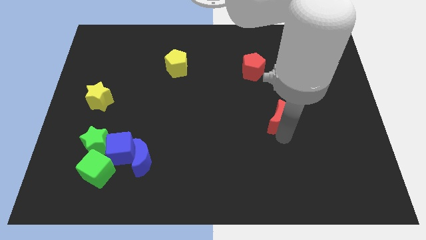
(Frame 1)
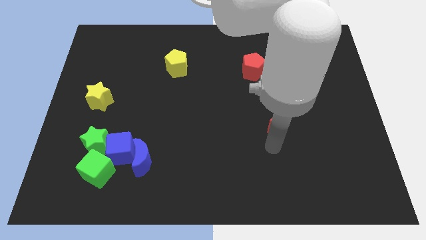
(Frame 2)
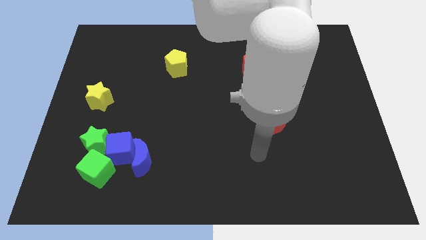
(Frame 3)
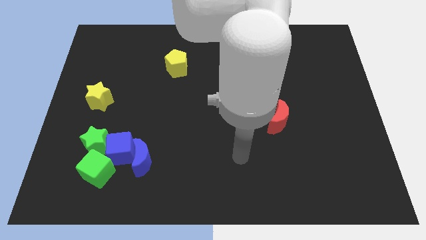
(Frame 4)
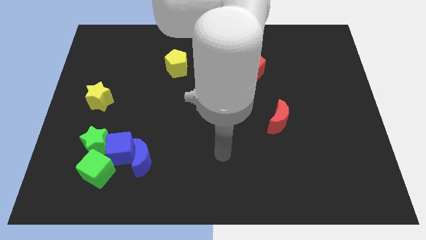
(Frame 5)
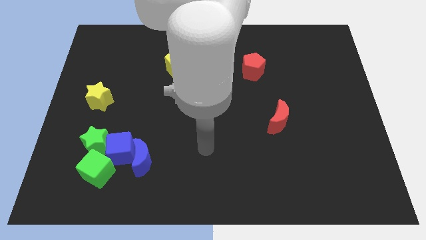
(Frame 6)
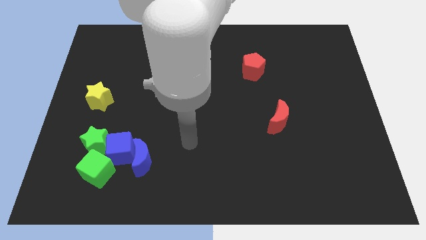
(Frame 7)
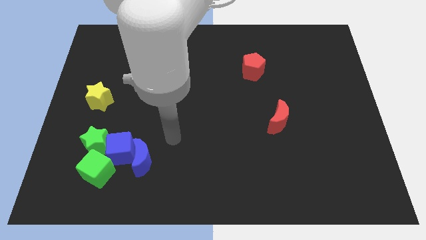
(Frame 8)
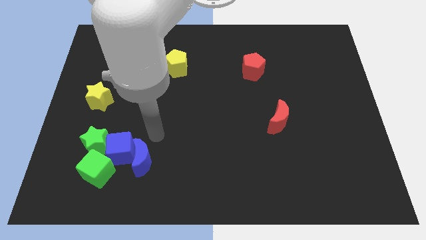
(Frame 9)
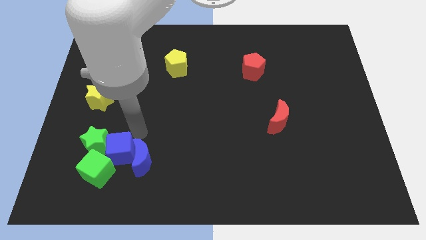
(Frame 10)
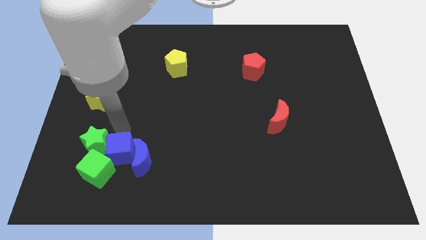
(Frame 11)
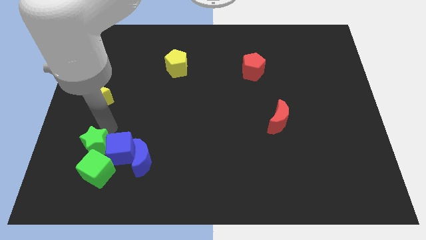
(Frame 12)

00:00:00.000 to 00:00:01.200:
move your arm towards the top of the blue cube

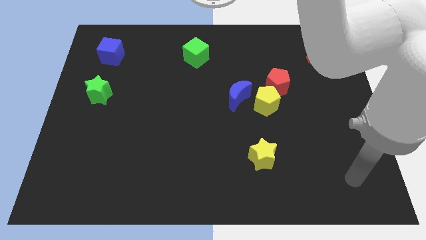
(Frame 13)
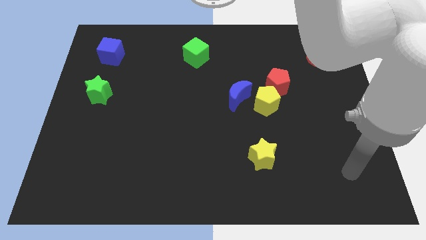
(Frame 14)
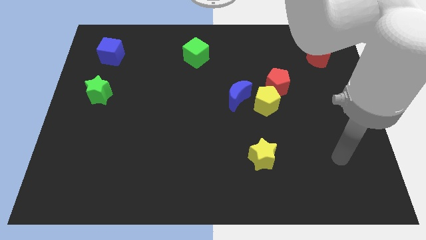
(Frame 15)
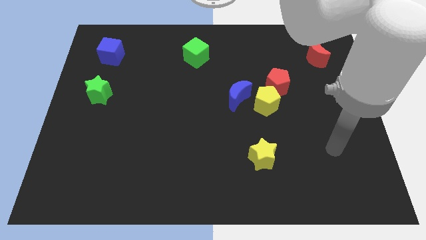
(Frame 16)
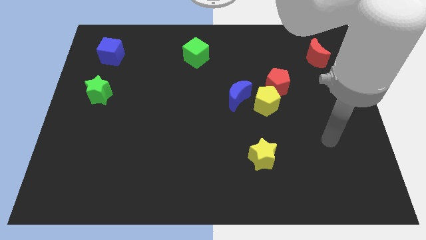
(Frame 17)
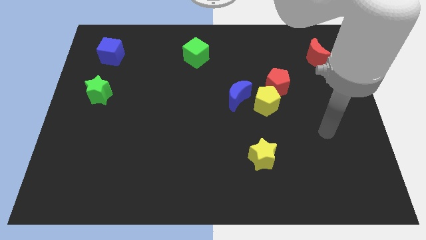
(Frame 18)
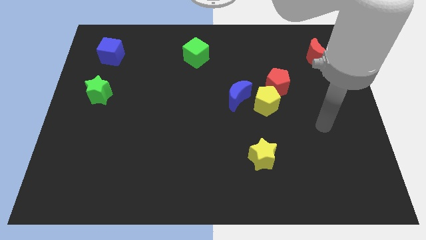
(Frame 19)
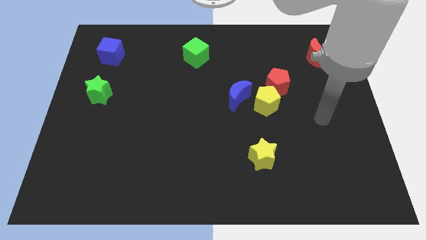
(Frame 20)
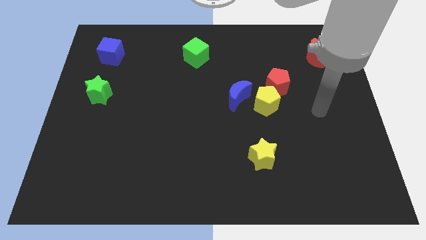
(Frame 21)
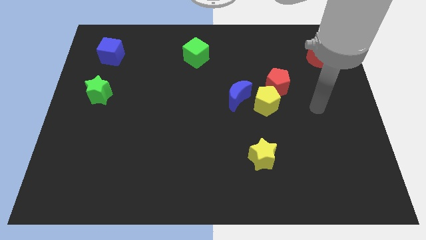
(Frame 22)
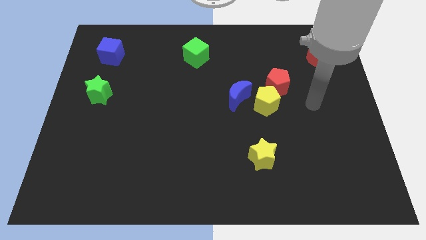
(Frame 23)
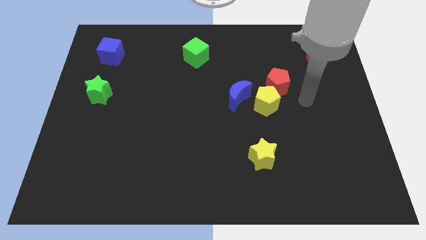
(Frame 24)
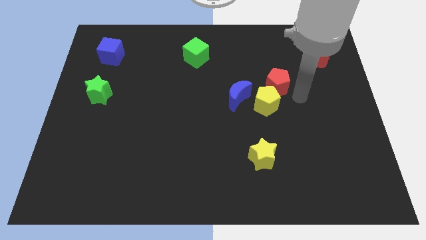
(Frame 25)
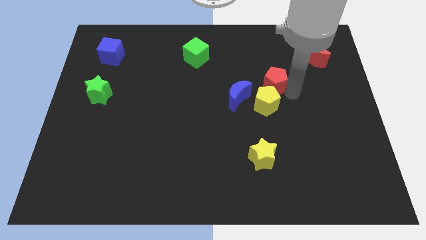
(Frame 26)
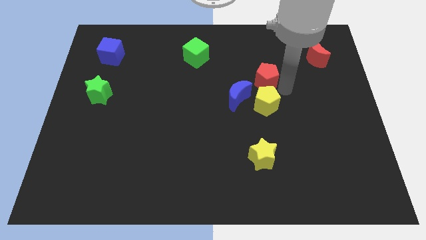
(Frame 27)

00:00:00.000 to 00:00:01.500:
move the arm towards the red pentagon

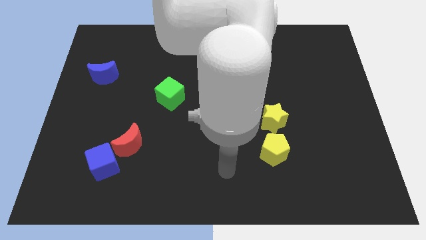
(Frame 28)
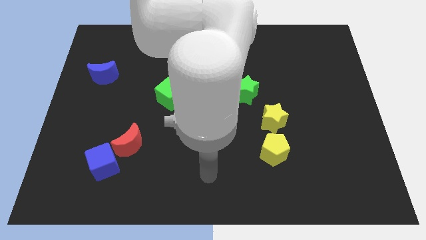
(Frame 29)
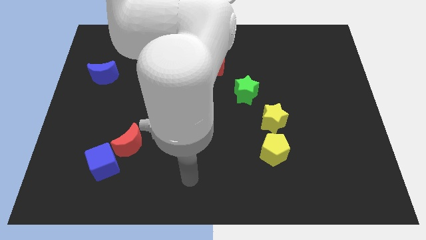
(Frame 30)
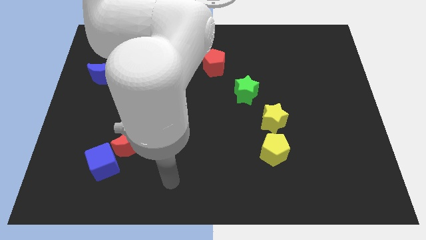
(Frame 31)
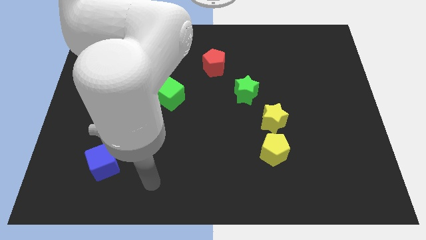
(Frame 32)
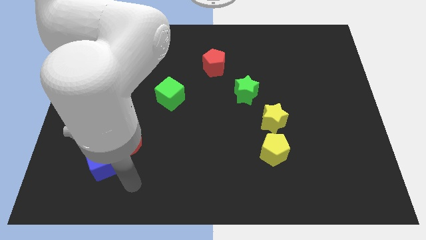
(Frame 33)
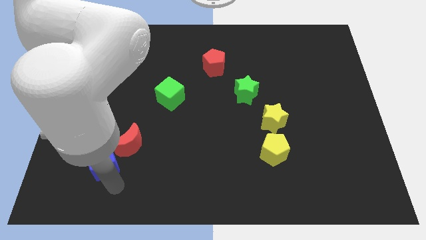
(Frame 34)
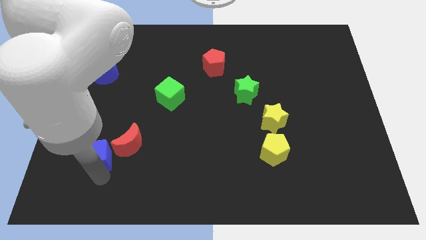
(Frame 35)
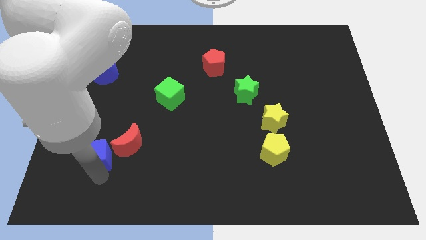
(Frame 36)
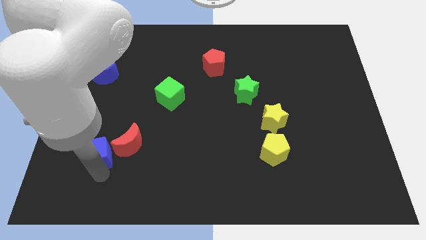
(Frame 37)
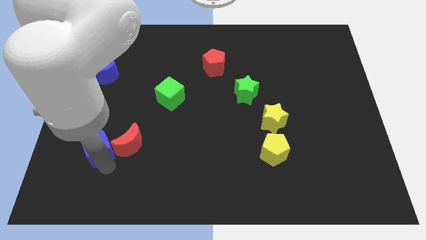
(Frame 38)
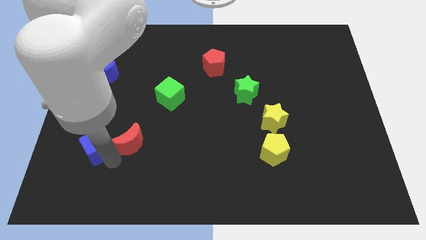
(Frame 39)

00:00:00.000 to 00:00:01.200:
move the blue cube to the left of the red crescent

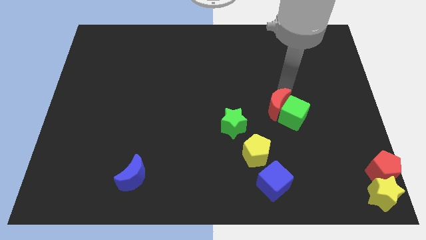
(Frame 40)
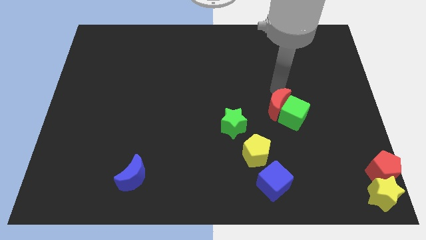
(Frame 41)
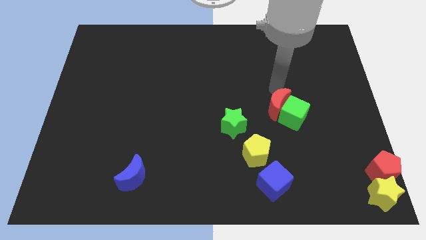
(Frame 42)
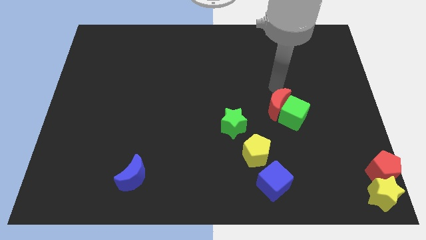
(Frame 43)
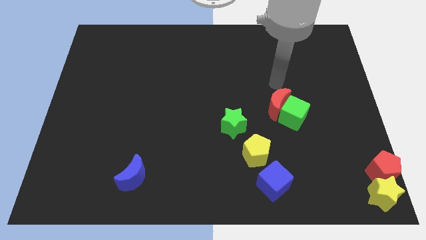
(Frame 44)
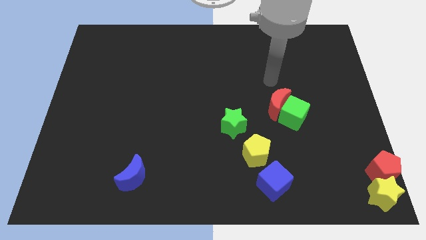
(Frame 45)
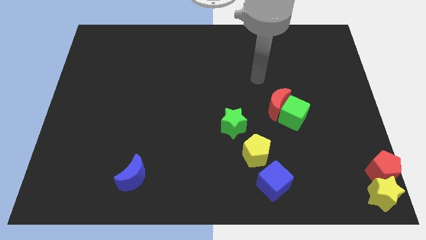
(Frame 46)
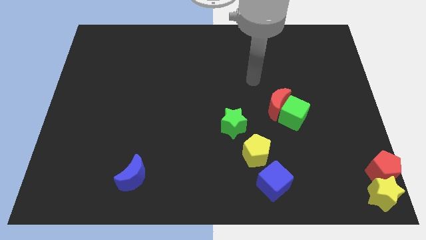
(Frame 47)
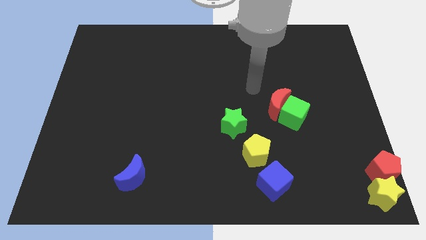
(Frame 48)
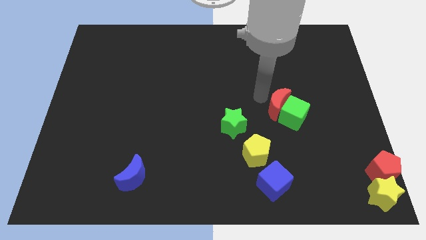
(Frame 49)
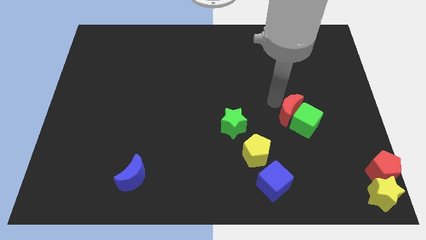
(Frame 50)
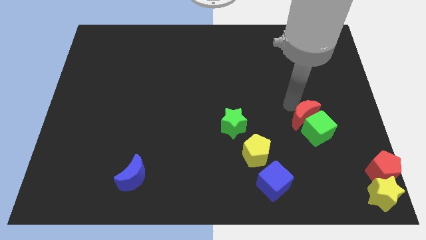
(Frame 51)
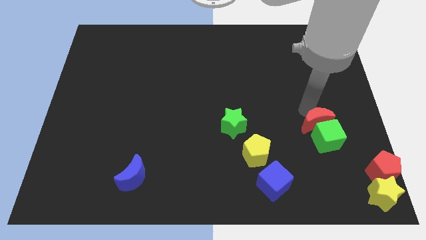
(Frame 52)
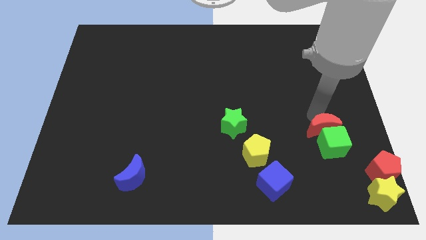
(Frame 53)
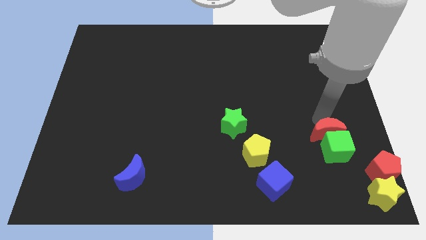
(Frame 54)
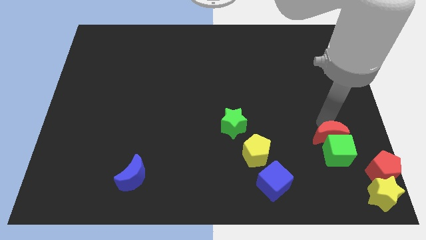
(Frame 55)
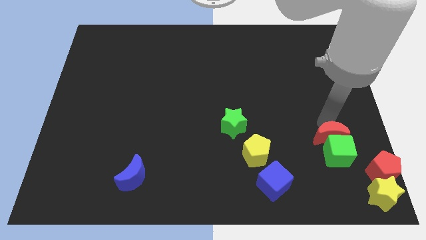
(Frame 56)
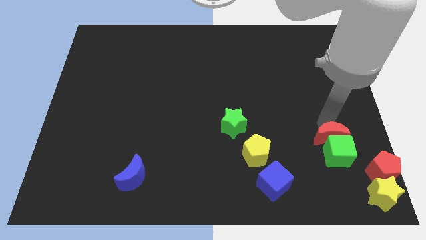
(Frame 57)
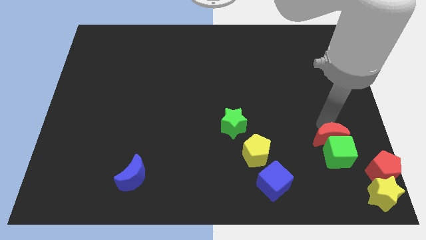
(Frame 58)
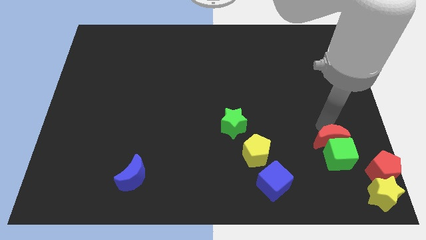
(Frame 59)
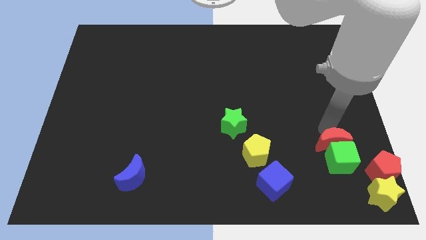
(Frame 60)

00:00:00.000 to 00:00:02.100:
move the red moon and the green cube towards the bottom right corner

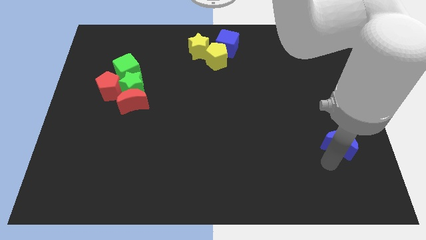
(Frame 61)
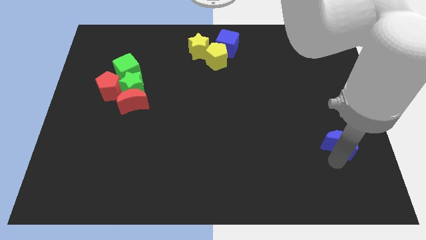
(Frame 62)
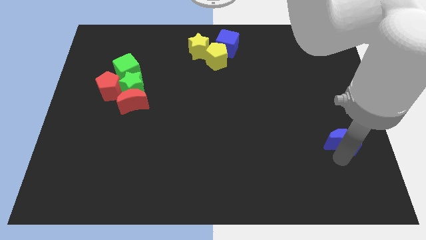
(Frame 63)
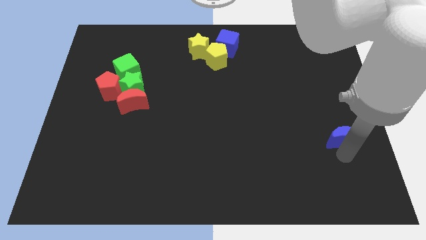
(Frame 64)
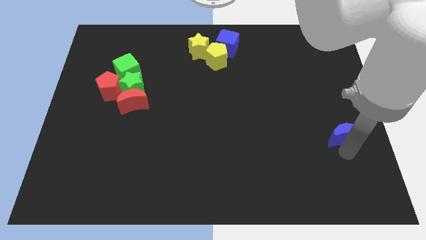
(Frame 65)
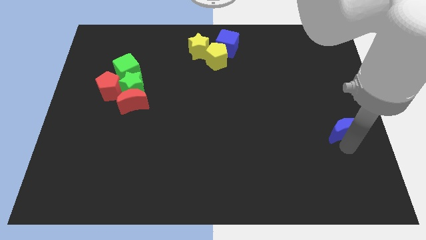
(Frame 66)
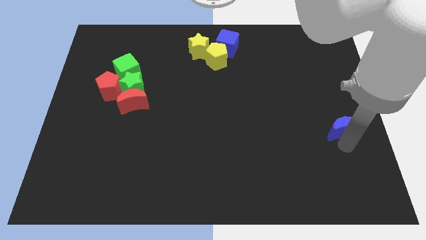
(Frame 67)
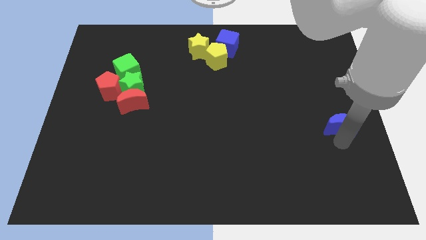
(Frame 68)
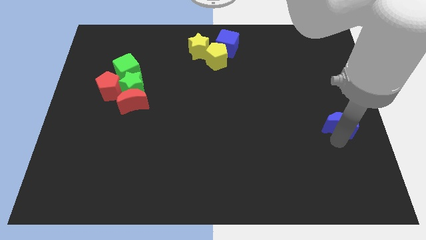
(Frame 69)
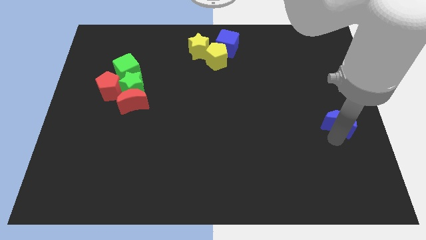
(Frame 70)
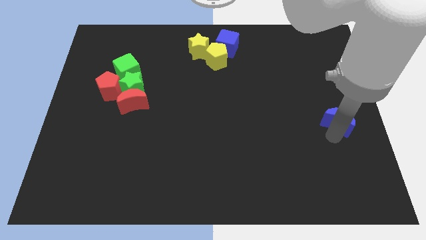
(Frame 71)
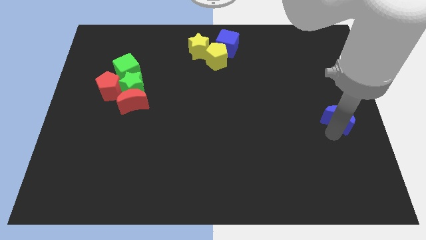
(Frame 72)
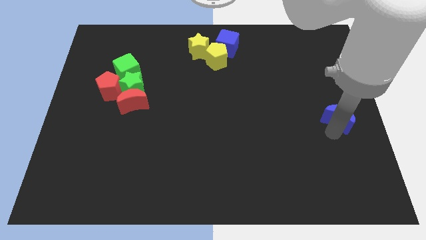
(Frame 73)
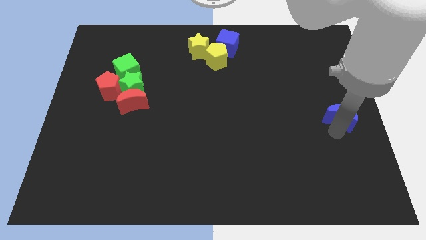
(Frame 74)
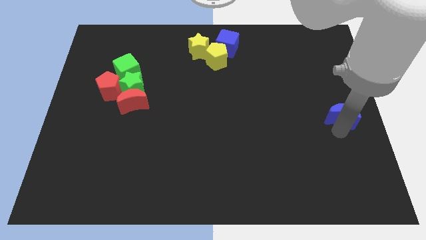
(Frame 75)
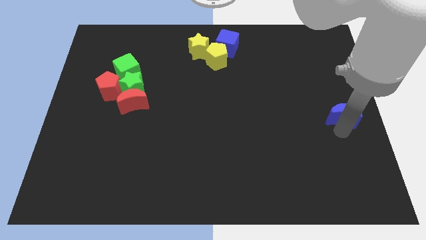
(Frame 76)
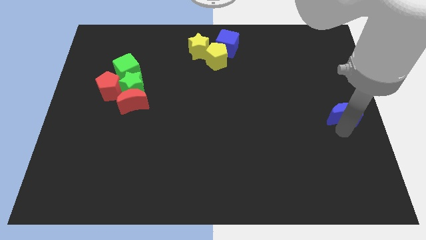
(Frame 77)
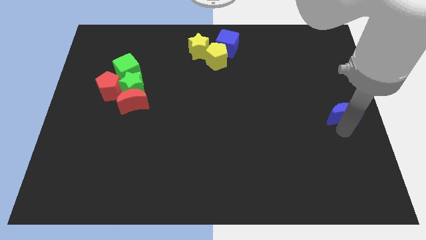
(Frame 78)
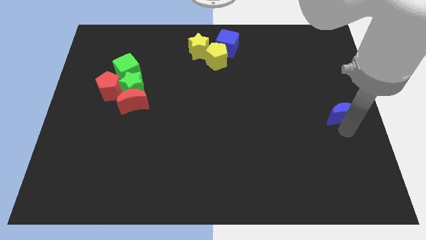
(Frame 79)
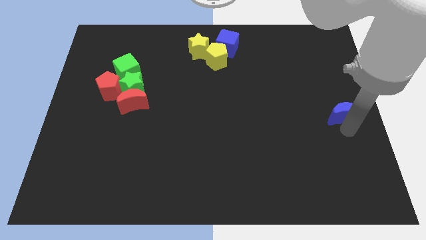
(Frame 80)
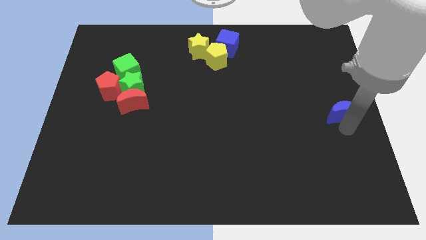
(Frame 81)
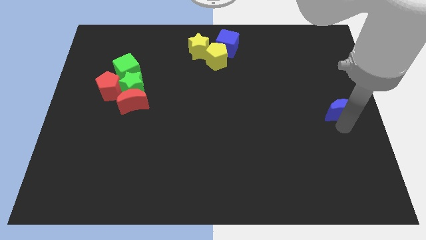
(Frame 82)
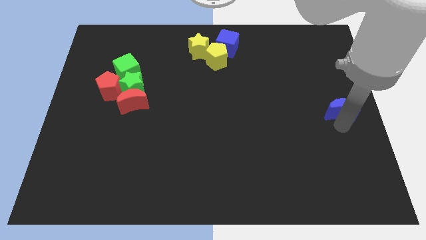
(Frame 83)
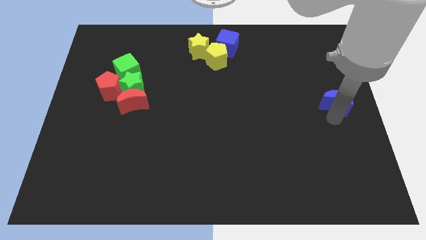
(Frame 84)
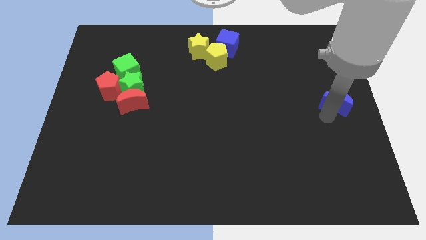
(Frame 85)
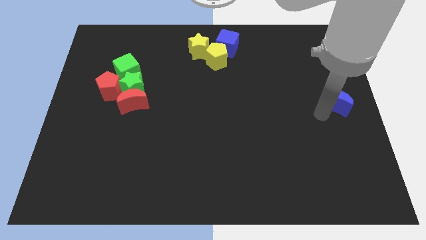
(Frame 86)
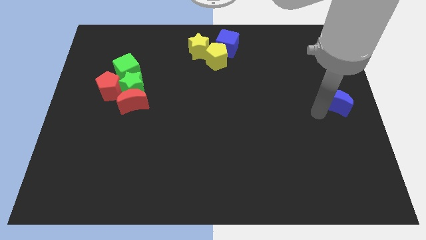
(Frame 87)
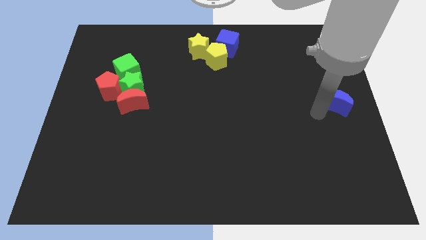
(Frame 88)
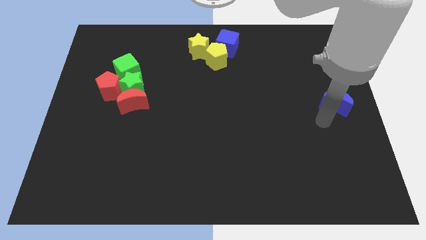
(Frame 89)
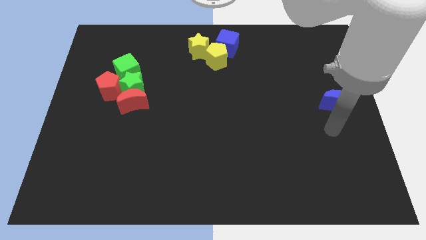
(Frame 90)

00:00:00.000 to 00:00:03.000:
move the blue moon to the middle left of the board

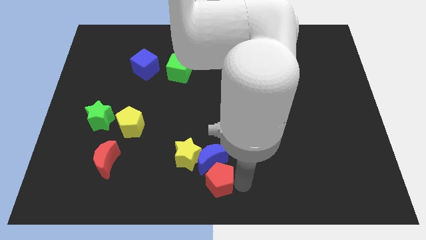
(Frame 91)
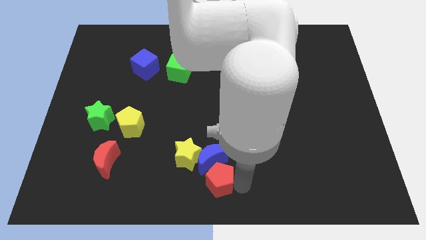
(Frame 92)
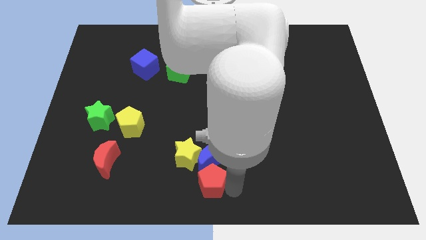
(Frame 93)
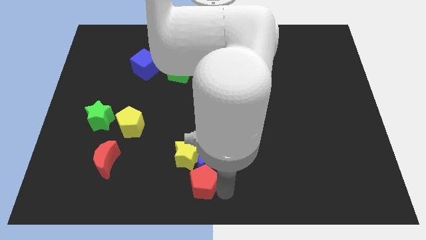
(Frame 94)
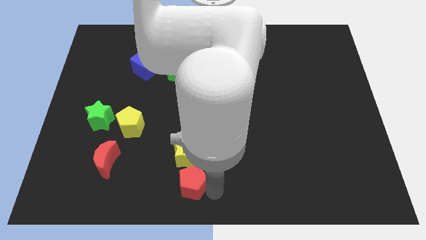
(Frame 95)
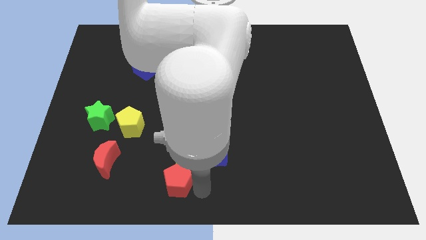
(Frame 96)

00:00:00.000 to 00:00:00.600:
place the red pentagon below the yellow star
